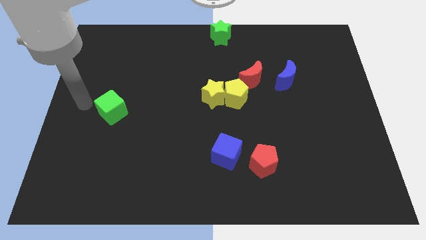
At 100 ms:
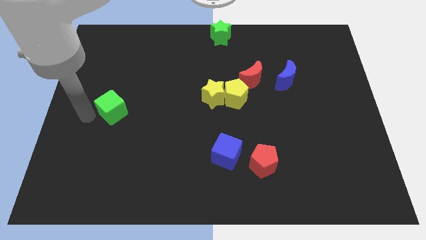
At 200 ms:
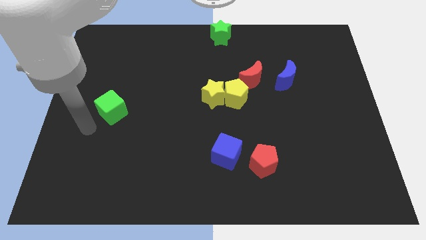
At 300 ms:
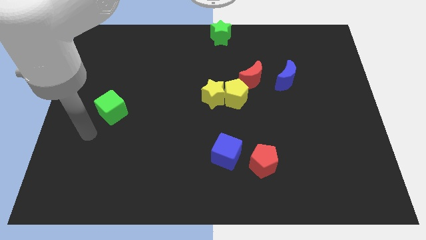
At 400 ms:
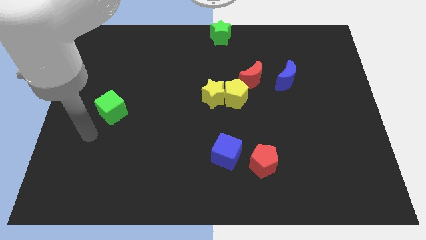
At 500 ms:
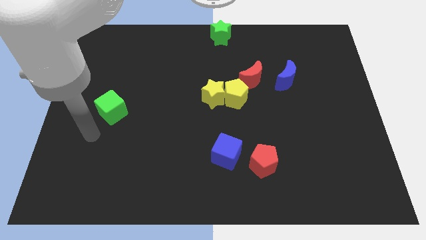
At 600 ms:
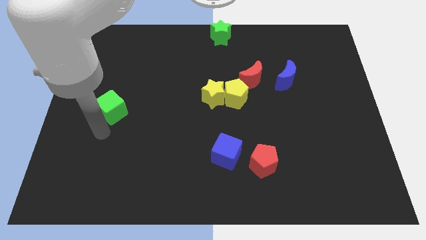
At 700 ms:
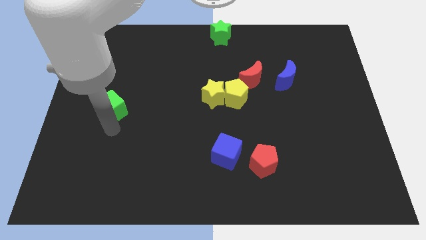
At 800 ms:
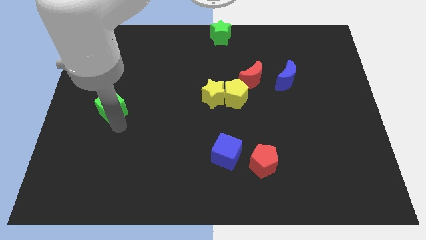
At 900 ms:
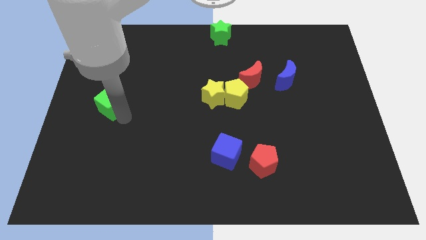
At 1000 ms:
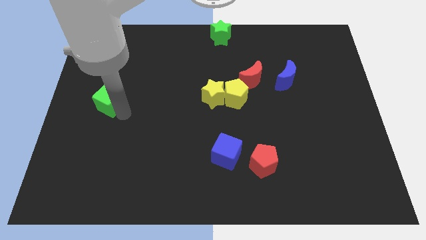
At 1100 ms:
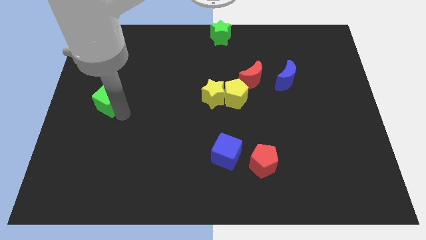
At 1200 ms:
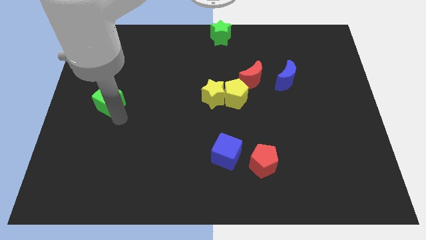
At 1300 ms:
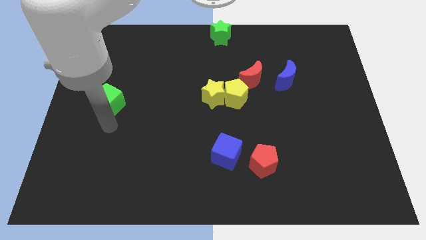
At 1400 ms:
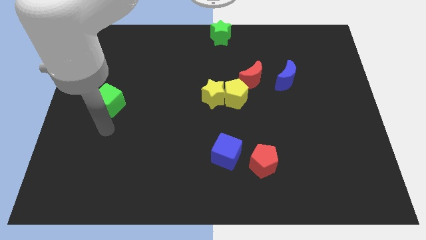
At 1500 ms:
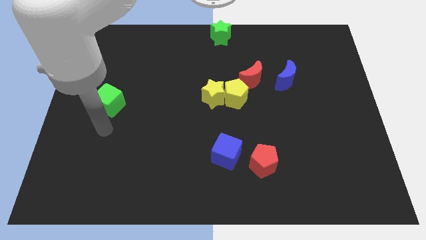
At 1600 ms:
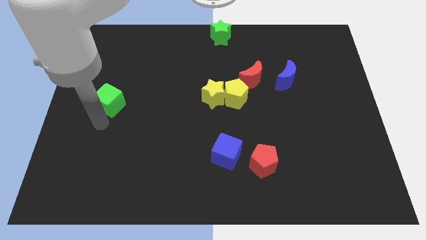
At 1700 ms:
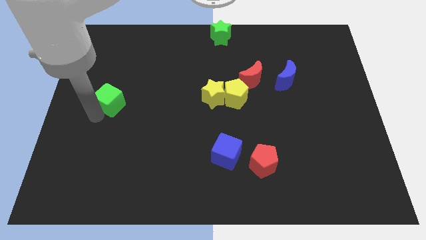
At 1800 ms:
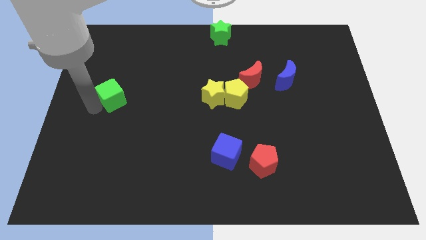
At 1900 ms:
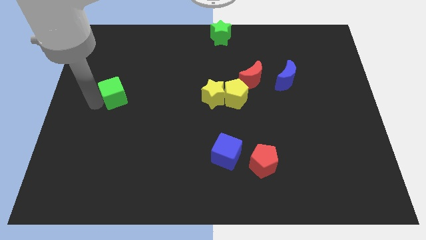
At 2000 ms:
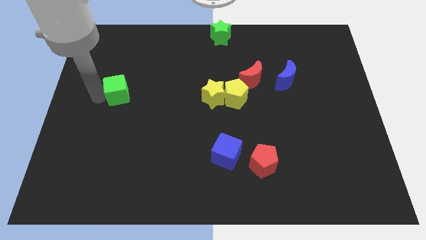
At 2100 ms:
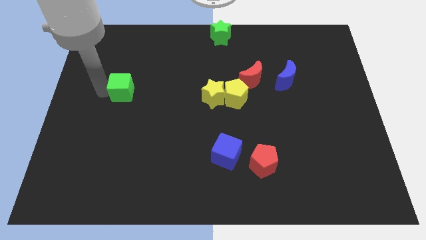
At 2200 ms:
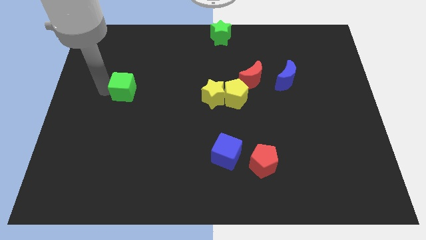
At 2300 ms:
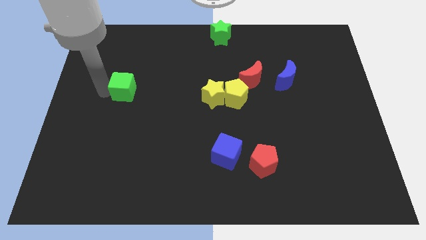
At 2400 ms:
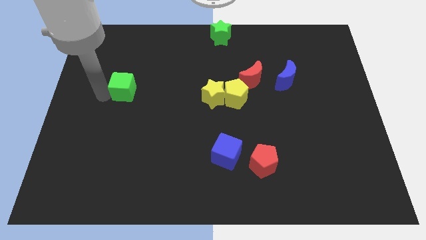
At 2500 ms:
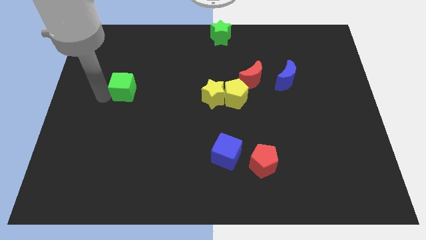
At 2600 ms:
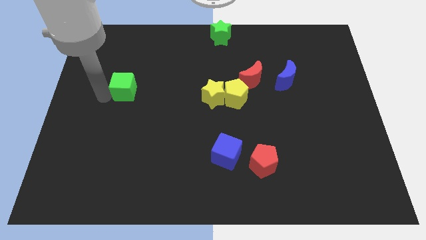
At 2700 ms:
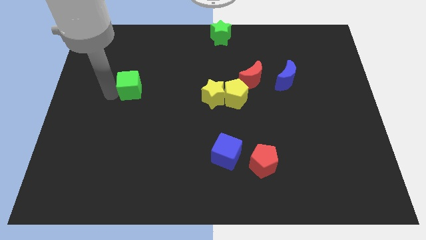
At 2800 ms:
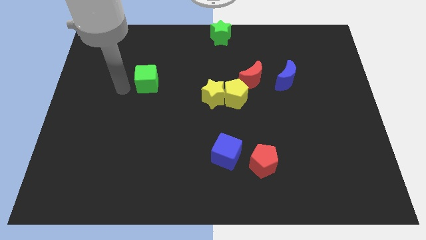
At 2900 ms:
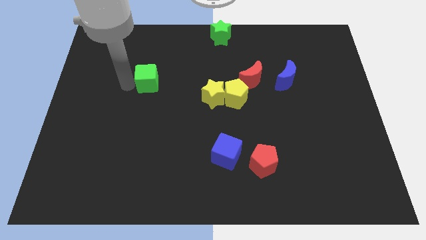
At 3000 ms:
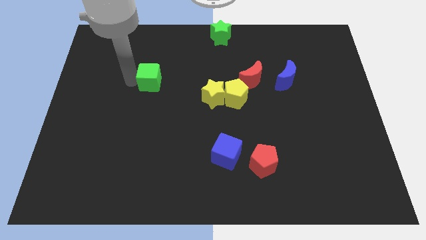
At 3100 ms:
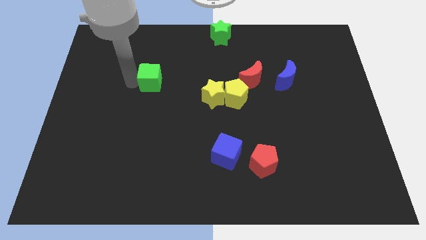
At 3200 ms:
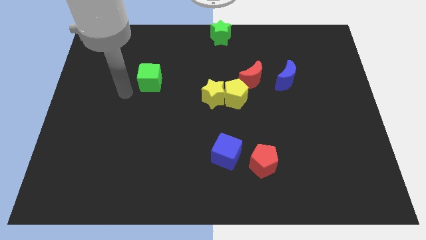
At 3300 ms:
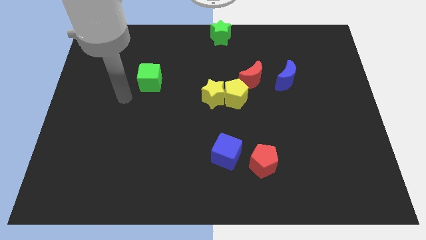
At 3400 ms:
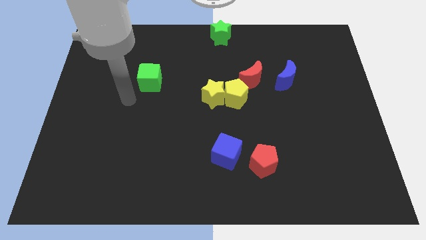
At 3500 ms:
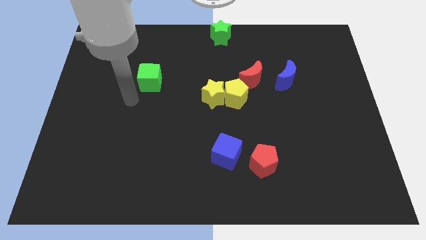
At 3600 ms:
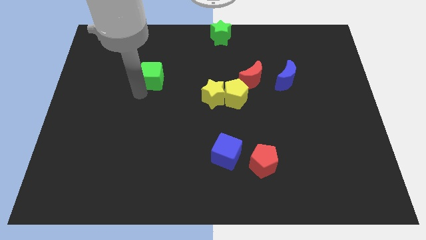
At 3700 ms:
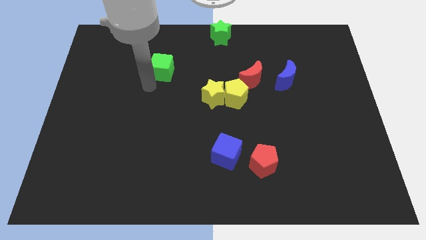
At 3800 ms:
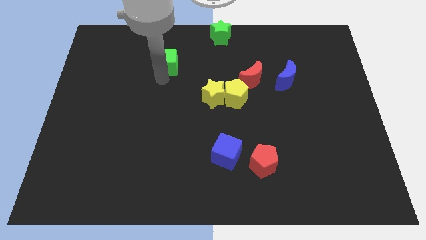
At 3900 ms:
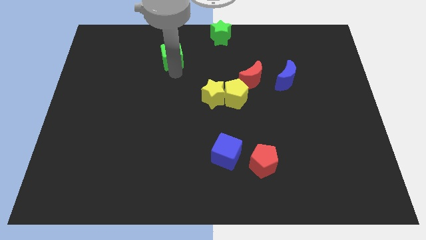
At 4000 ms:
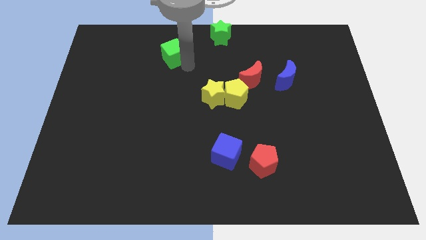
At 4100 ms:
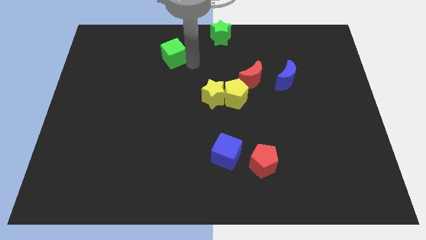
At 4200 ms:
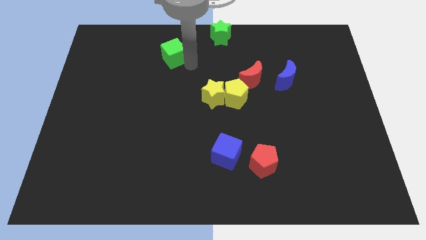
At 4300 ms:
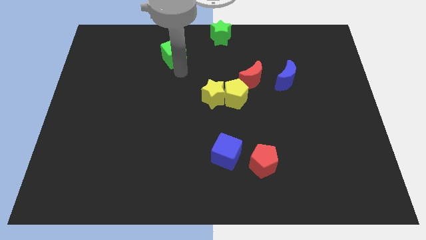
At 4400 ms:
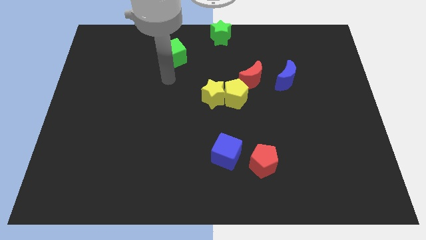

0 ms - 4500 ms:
place the green cube diagonally to green star

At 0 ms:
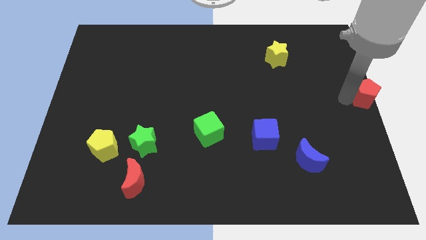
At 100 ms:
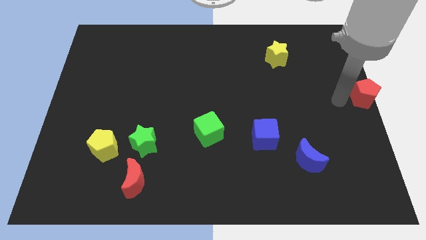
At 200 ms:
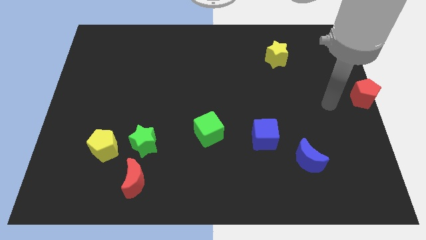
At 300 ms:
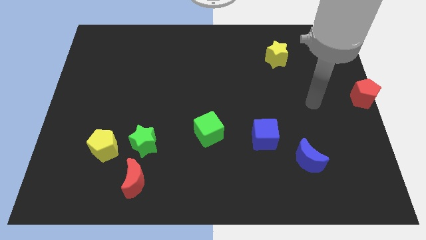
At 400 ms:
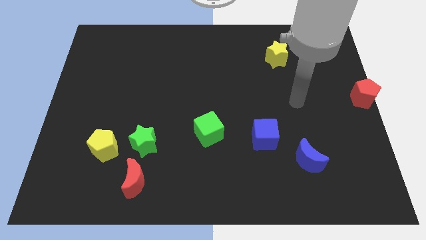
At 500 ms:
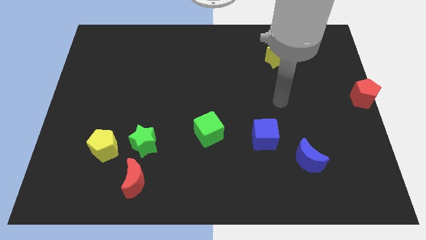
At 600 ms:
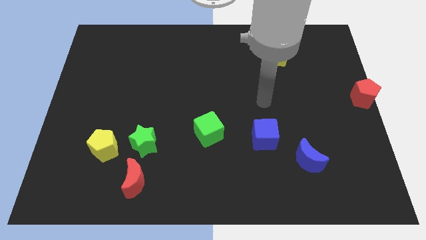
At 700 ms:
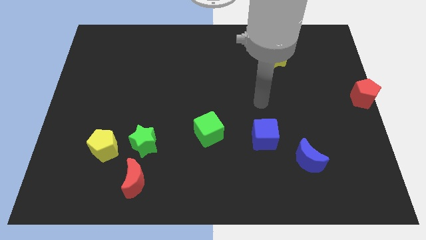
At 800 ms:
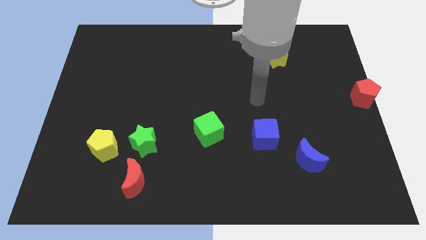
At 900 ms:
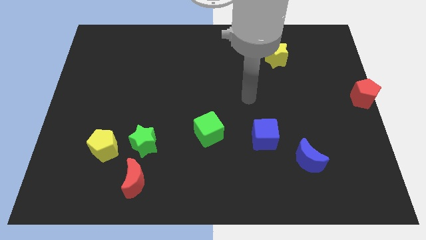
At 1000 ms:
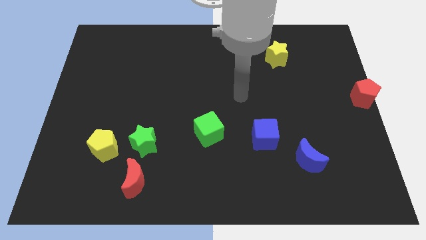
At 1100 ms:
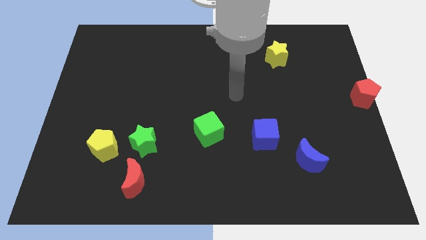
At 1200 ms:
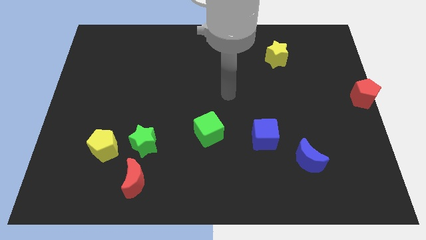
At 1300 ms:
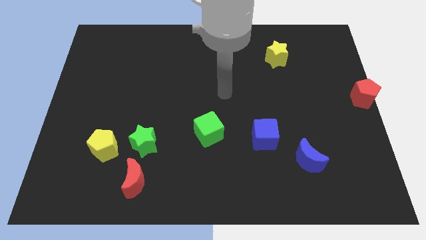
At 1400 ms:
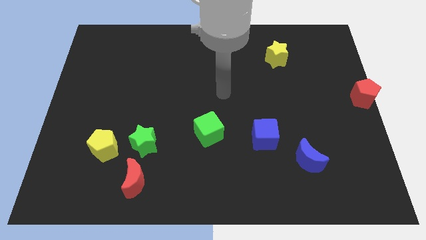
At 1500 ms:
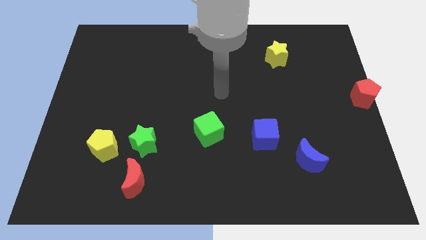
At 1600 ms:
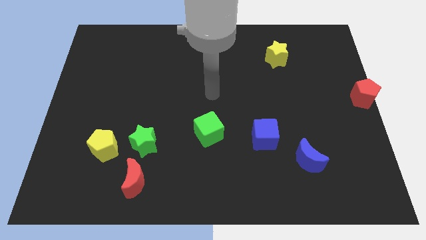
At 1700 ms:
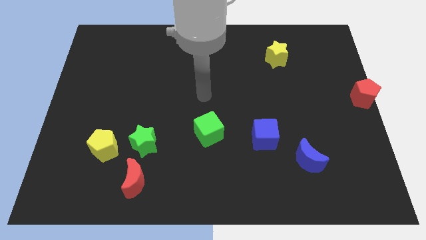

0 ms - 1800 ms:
point your arm at the top of the green cube

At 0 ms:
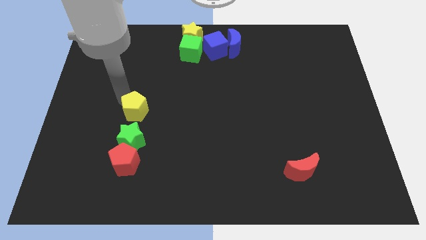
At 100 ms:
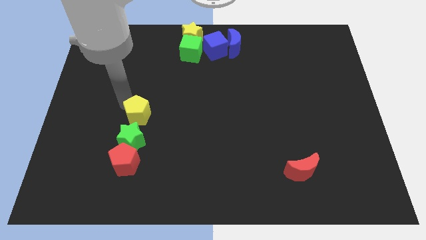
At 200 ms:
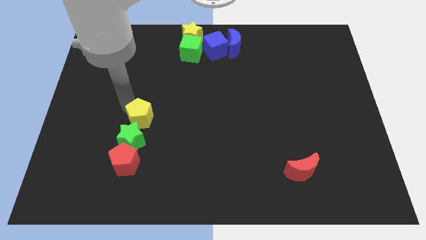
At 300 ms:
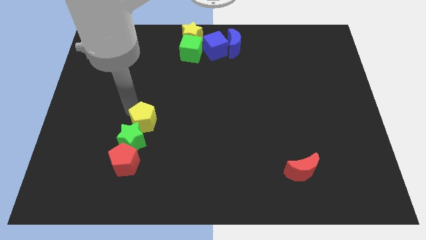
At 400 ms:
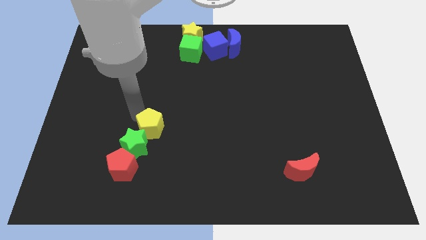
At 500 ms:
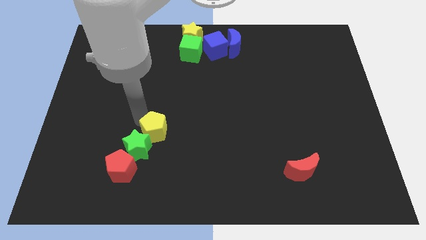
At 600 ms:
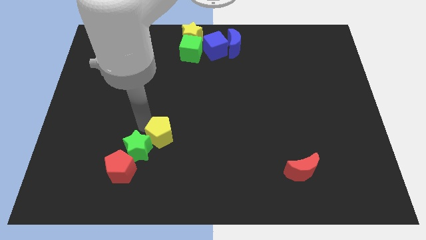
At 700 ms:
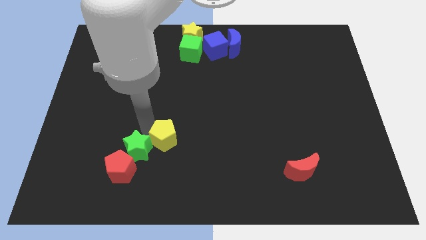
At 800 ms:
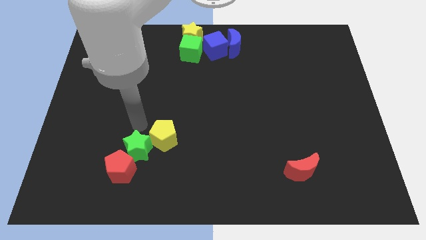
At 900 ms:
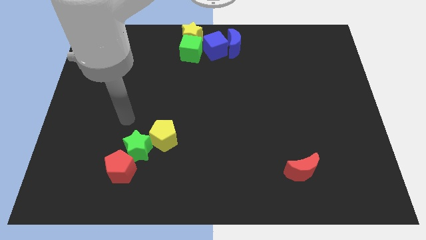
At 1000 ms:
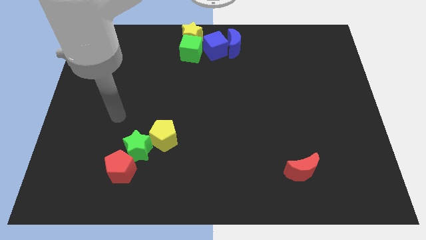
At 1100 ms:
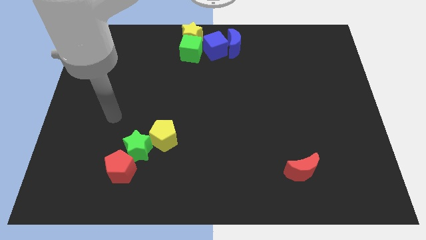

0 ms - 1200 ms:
push yellow pentagon diagonally downwards a bit

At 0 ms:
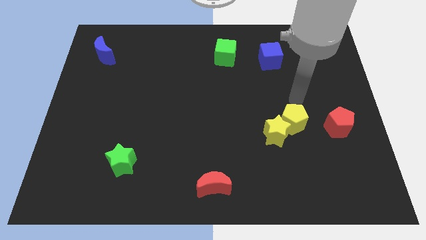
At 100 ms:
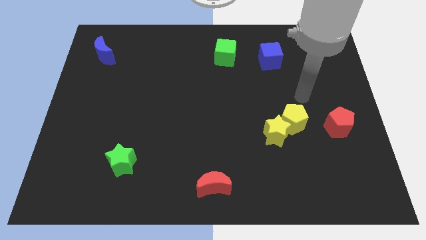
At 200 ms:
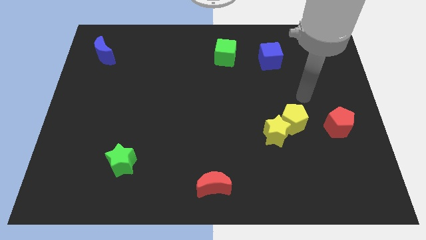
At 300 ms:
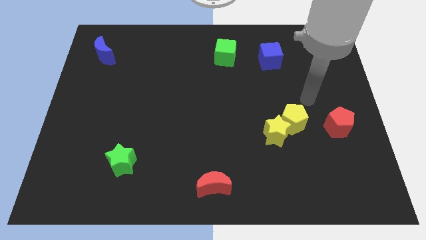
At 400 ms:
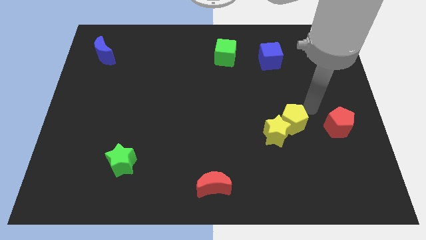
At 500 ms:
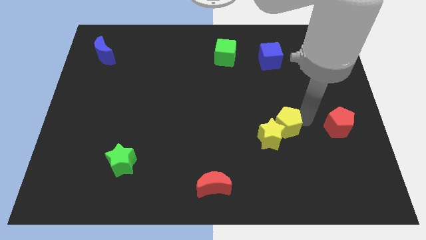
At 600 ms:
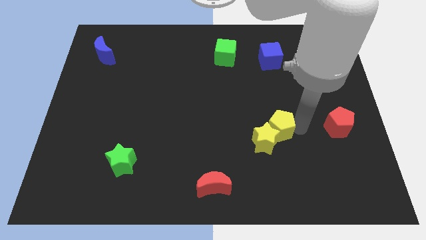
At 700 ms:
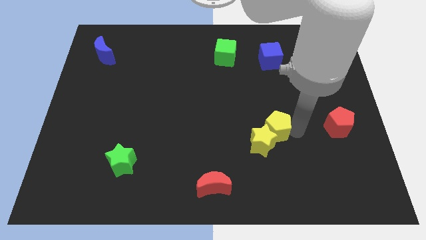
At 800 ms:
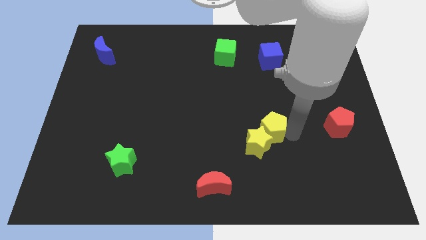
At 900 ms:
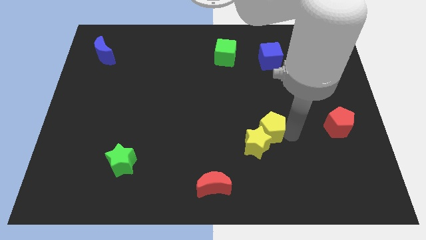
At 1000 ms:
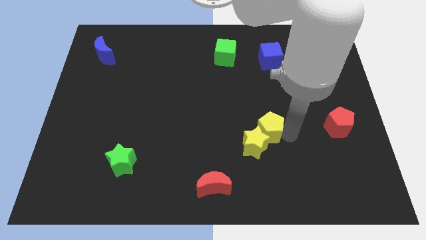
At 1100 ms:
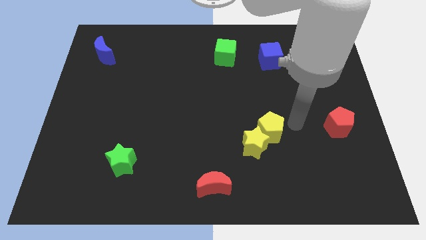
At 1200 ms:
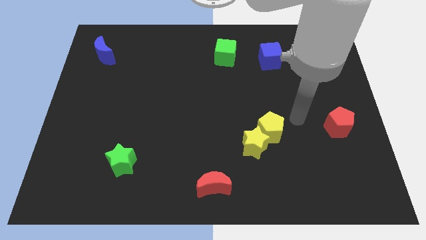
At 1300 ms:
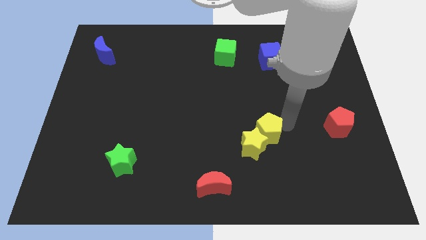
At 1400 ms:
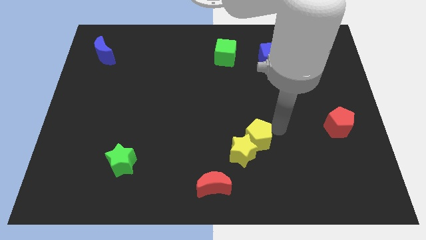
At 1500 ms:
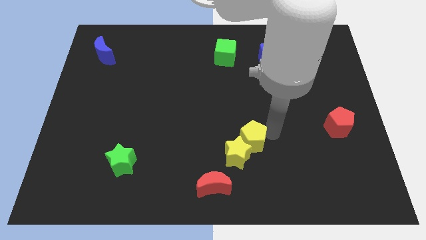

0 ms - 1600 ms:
push the yellow star with the yellow pentagon to the bottom of the board
